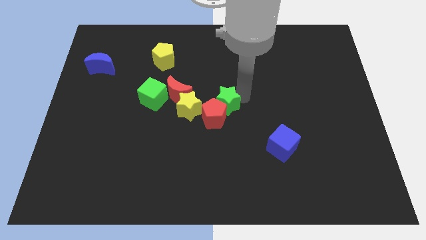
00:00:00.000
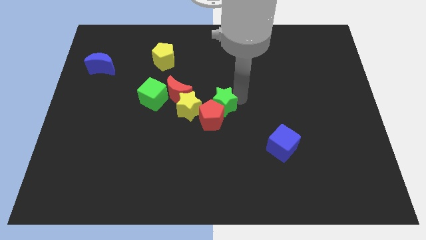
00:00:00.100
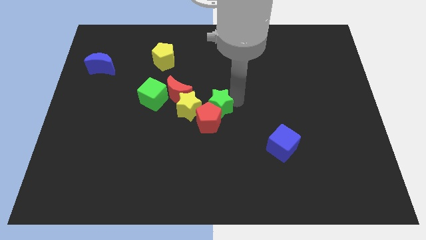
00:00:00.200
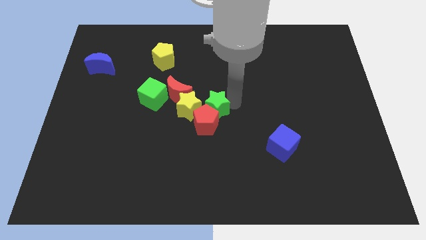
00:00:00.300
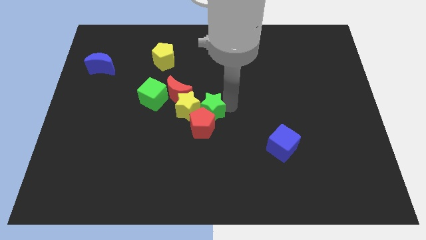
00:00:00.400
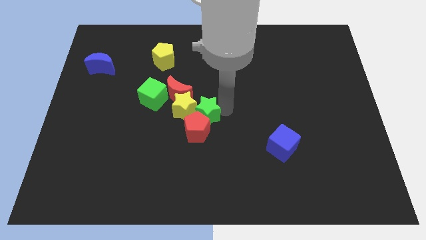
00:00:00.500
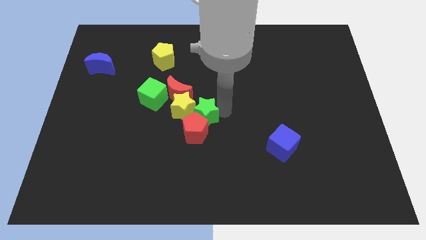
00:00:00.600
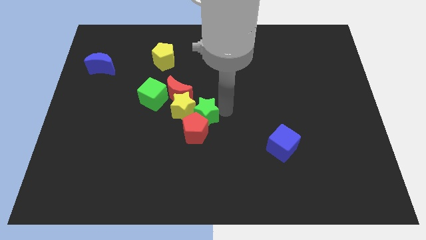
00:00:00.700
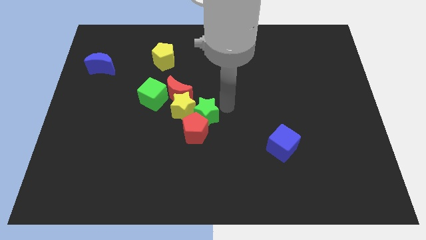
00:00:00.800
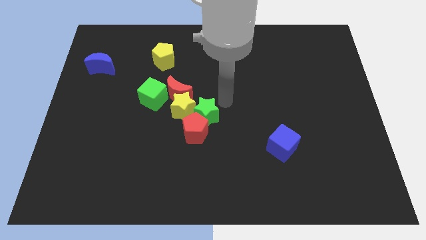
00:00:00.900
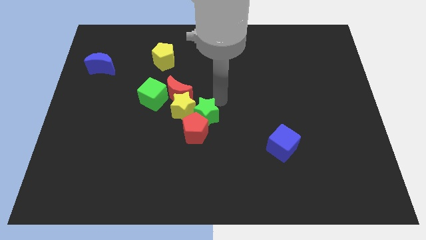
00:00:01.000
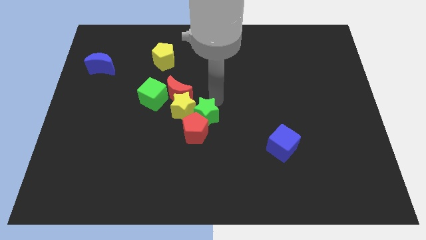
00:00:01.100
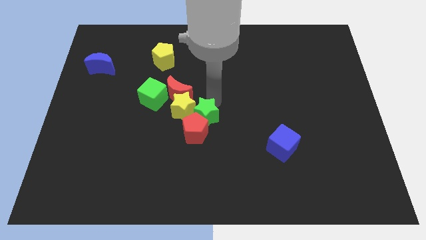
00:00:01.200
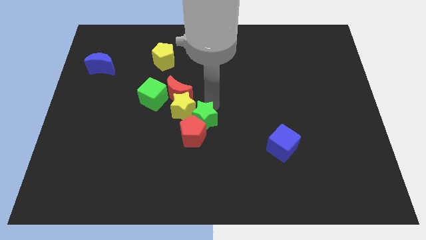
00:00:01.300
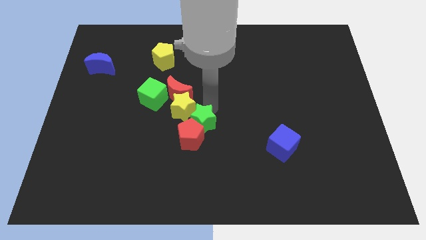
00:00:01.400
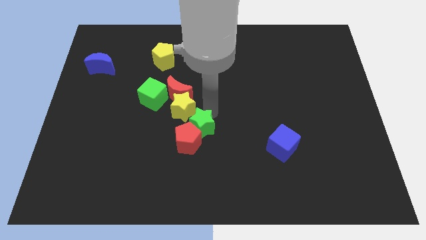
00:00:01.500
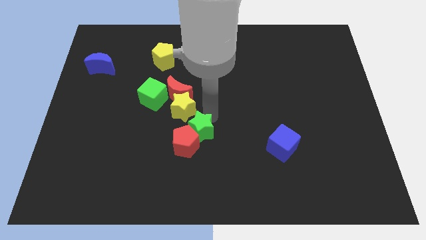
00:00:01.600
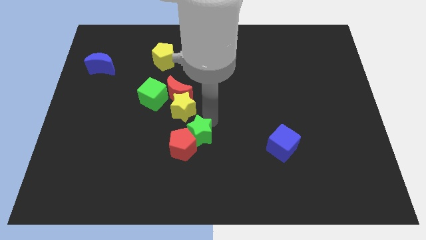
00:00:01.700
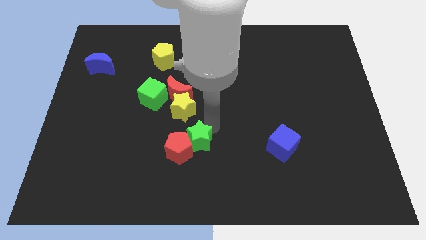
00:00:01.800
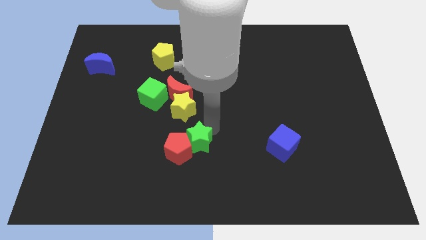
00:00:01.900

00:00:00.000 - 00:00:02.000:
push the green star with the red pentagon to the bottom center of the board

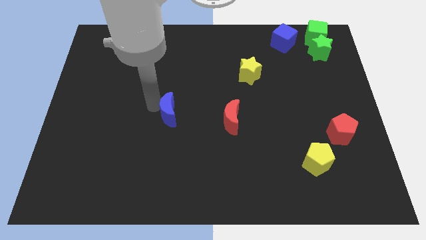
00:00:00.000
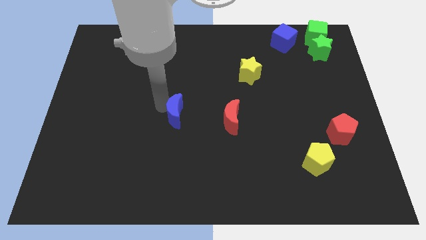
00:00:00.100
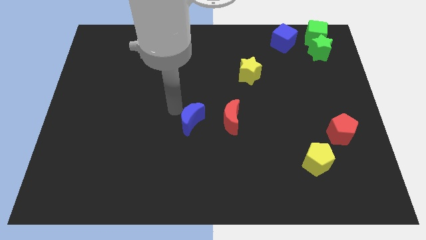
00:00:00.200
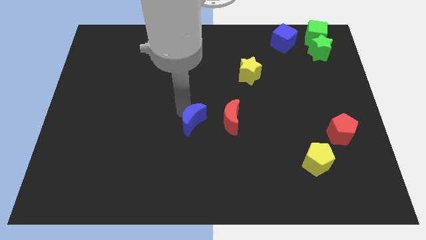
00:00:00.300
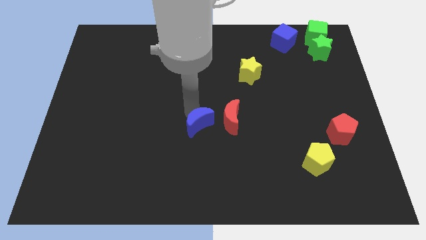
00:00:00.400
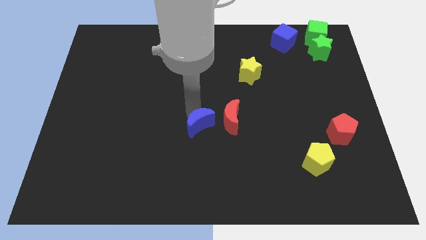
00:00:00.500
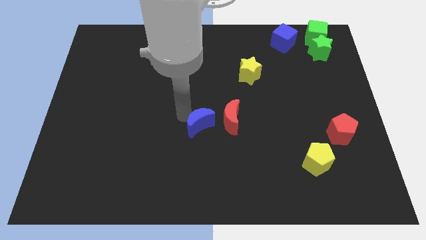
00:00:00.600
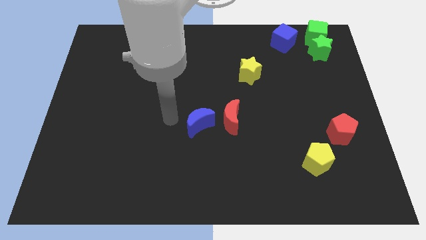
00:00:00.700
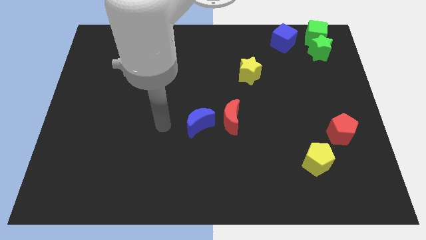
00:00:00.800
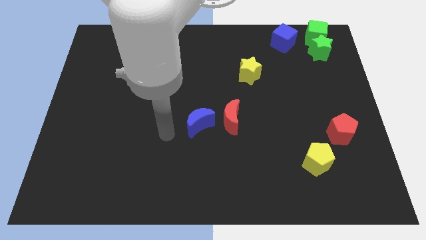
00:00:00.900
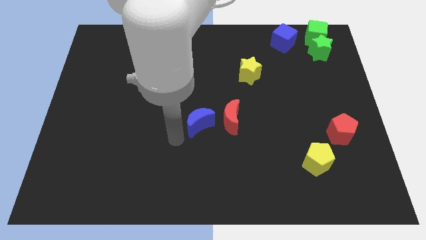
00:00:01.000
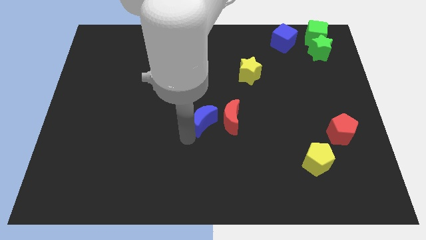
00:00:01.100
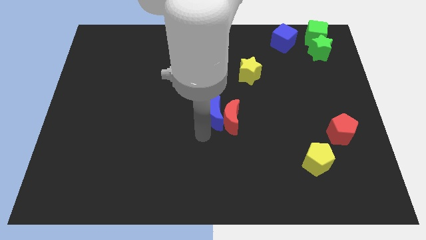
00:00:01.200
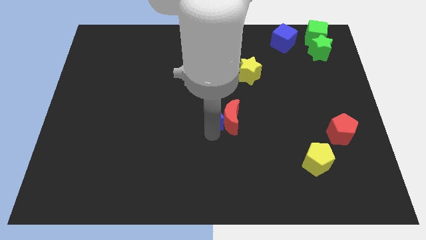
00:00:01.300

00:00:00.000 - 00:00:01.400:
push the blue moon close to the red moon at the center of the board

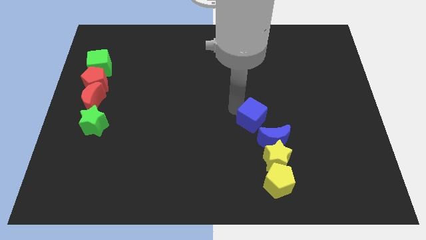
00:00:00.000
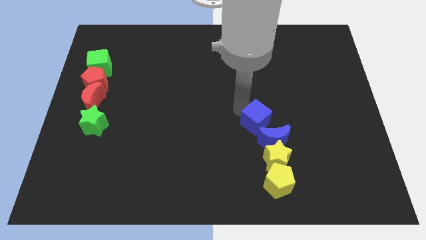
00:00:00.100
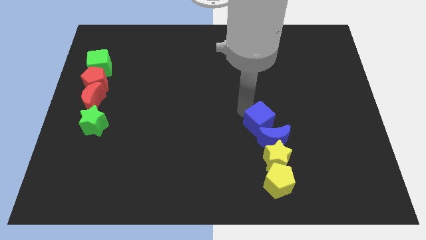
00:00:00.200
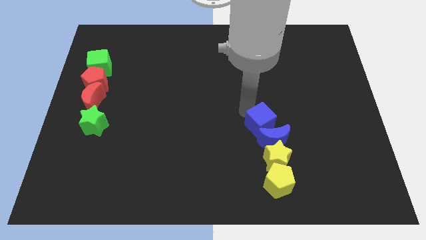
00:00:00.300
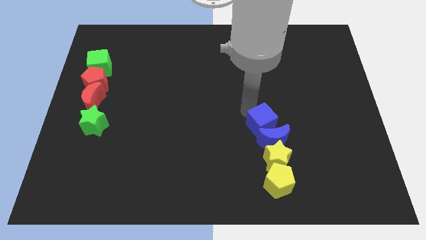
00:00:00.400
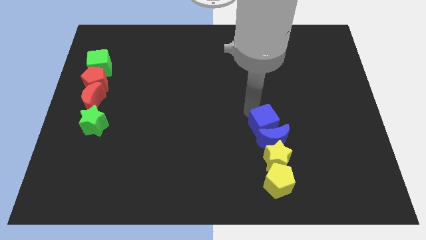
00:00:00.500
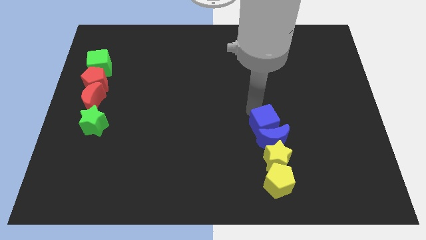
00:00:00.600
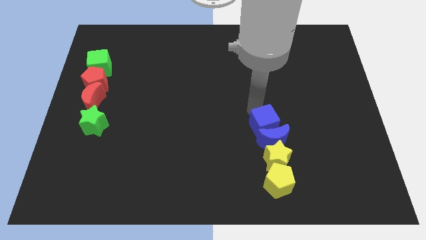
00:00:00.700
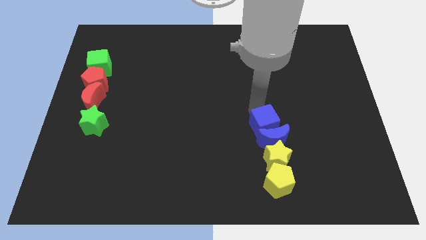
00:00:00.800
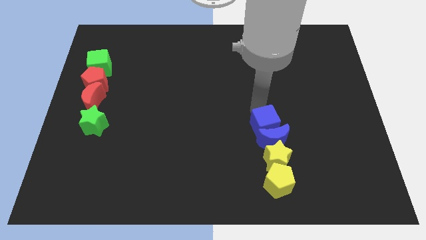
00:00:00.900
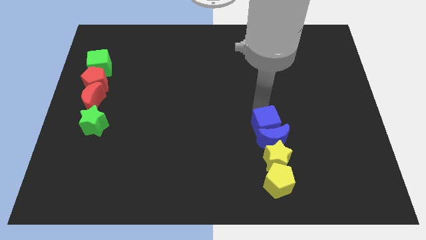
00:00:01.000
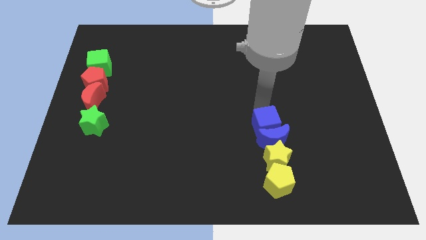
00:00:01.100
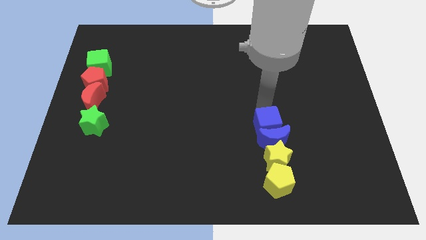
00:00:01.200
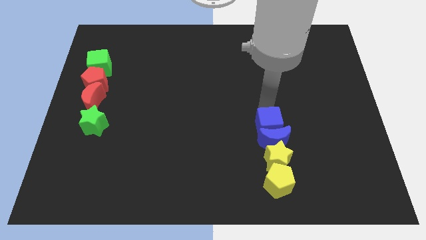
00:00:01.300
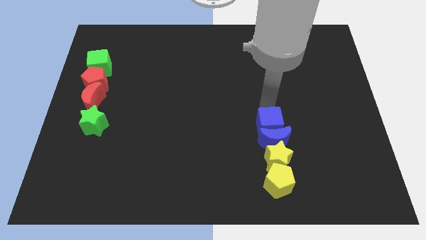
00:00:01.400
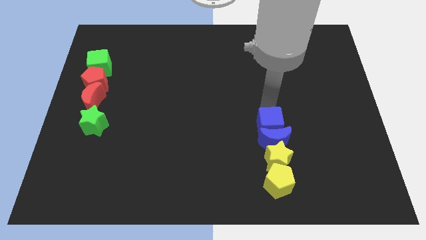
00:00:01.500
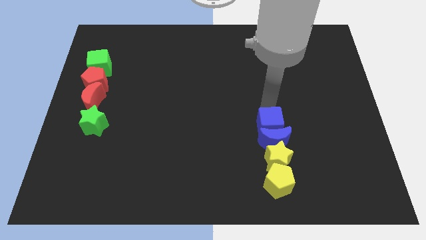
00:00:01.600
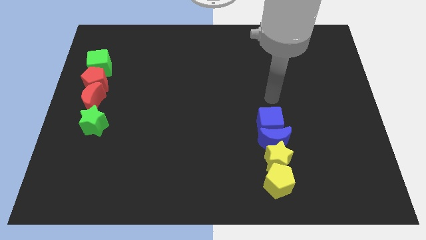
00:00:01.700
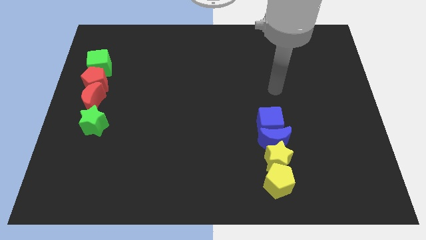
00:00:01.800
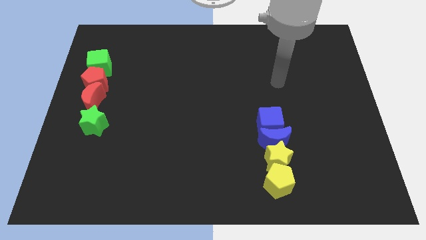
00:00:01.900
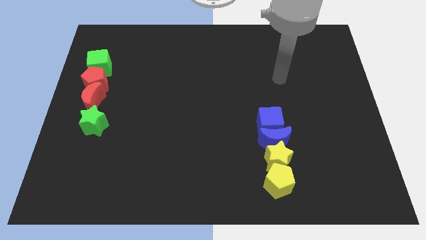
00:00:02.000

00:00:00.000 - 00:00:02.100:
place the blue cube vertically above the blue crescent

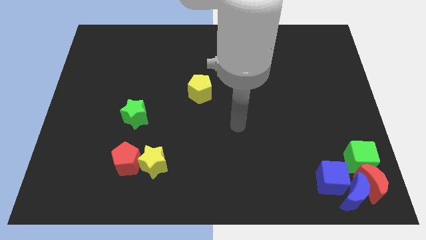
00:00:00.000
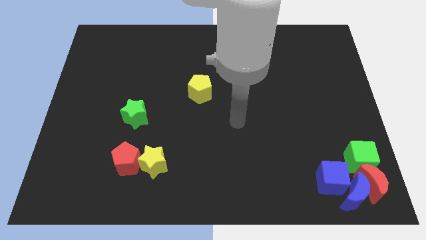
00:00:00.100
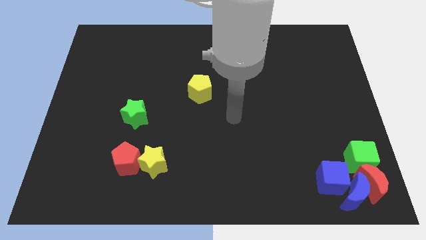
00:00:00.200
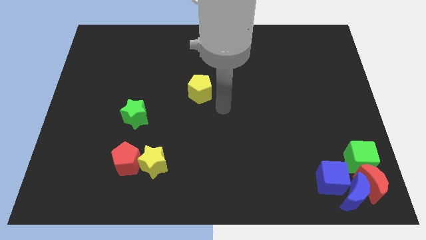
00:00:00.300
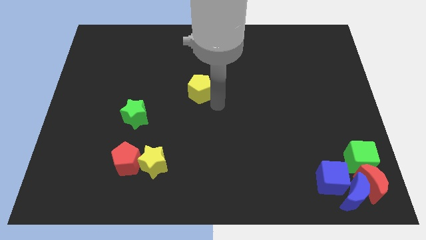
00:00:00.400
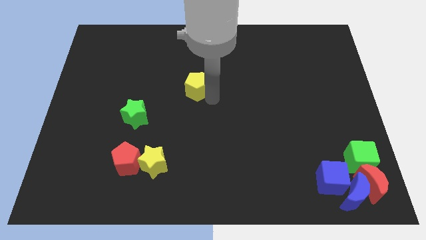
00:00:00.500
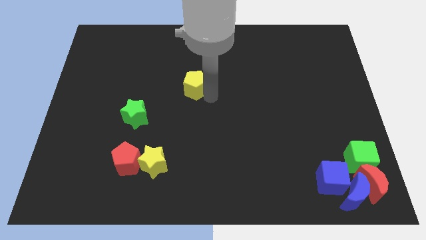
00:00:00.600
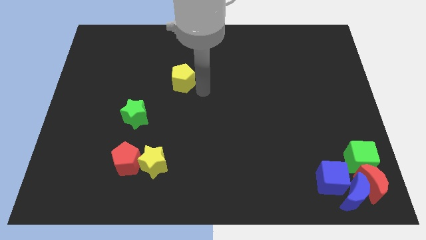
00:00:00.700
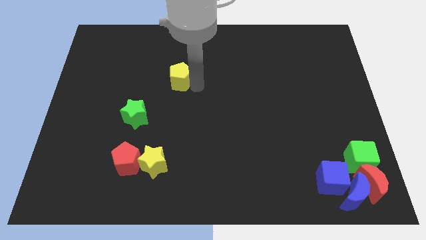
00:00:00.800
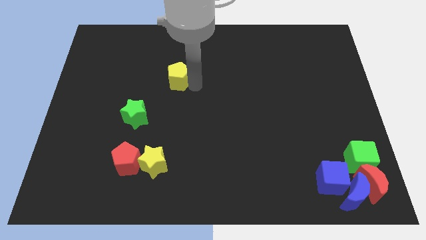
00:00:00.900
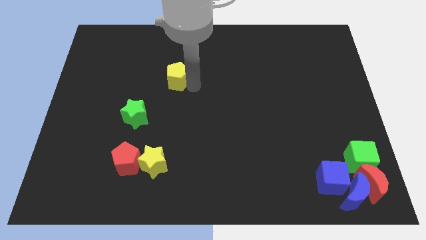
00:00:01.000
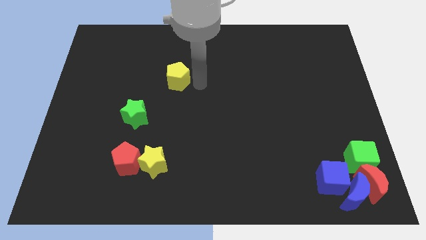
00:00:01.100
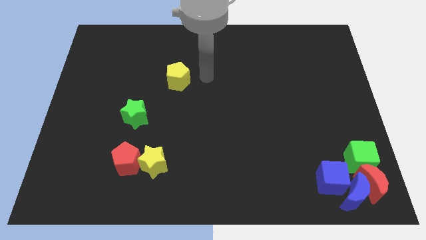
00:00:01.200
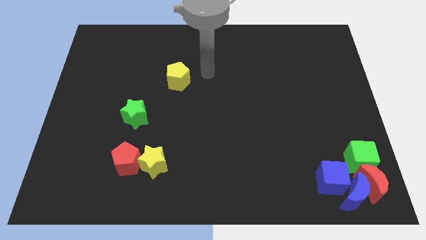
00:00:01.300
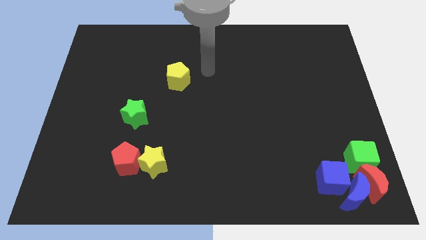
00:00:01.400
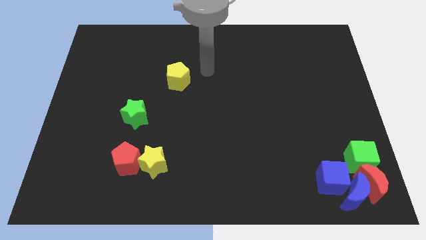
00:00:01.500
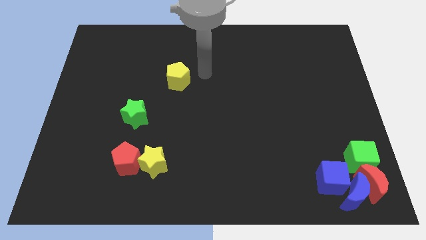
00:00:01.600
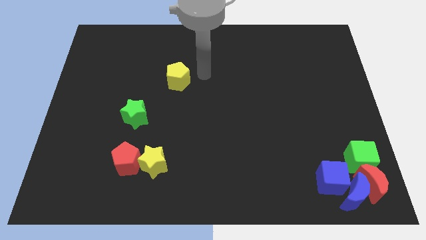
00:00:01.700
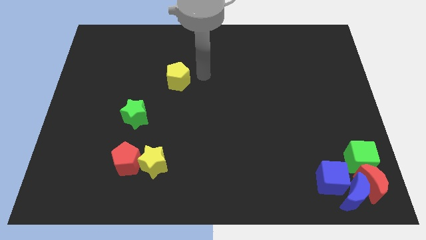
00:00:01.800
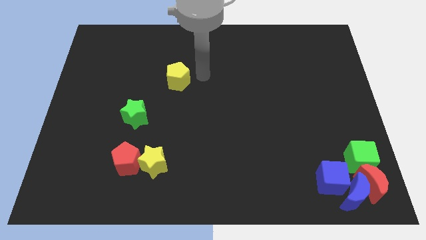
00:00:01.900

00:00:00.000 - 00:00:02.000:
place the yellow pentagon diagonally to the top right of the green star

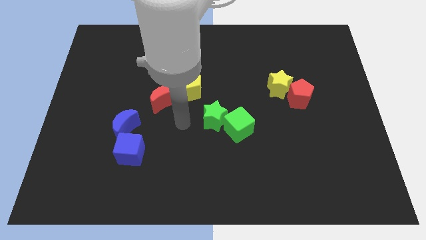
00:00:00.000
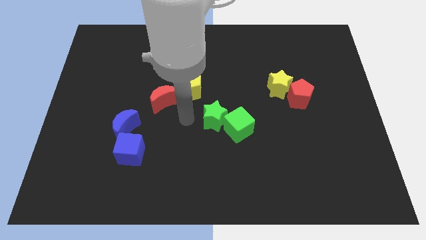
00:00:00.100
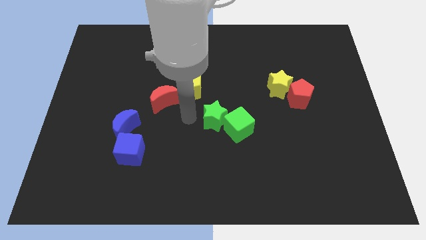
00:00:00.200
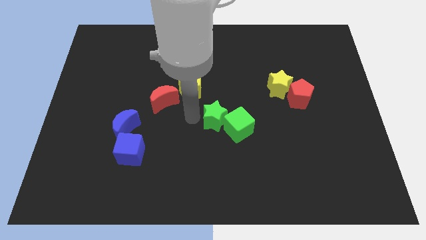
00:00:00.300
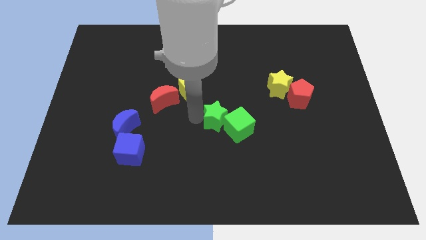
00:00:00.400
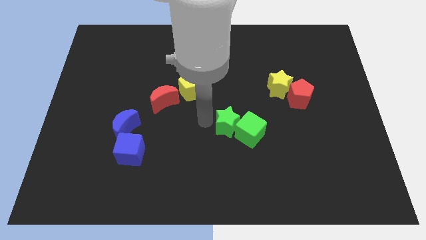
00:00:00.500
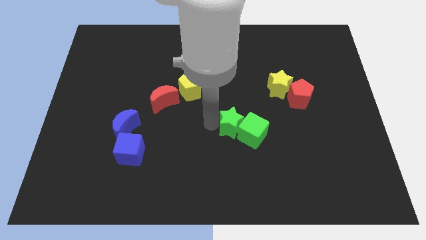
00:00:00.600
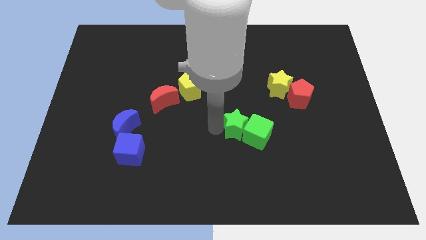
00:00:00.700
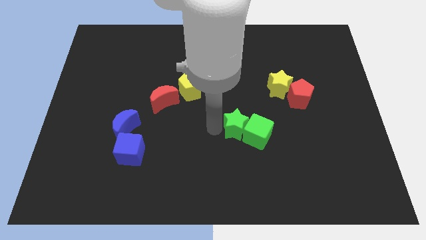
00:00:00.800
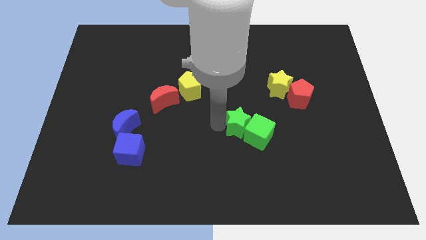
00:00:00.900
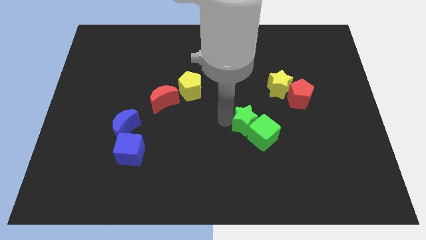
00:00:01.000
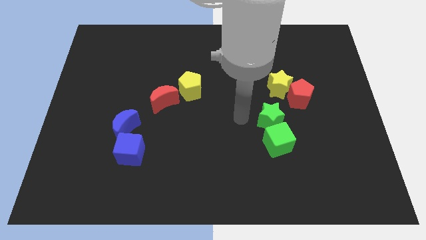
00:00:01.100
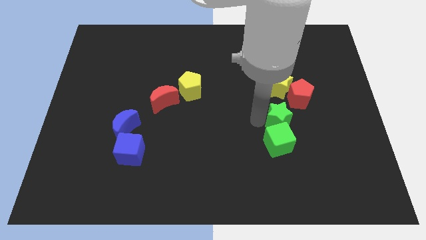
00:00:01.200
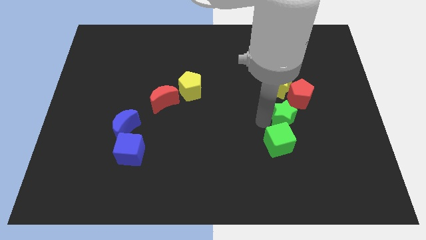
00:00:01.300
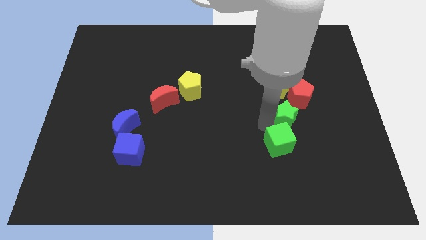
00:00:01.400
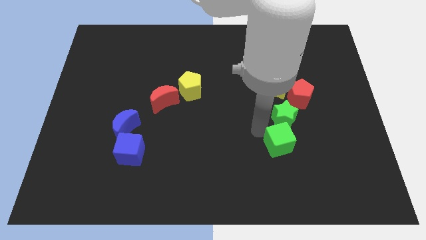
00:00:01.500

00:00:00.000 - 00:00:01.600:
move the green star and green cube together away from the centre of the board
